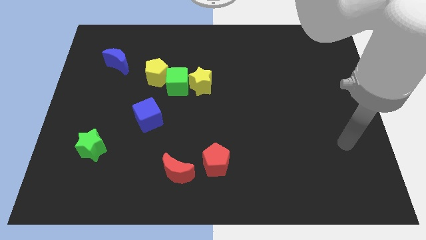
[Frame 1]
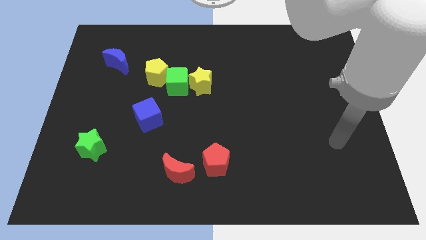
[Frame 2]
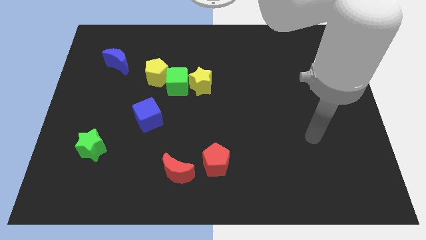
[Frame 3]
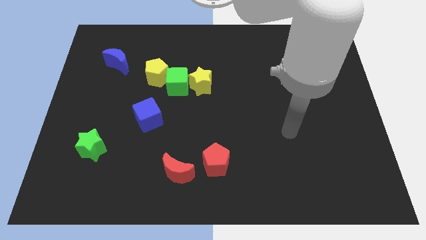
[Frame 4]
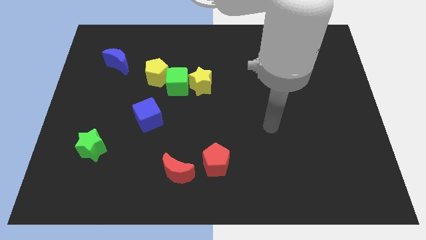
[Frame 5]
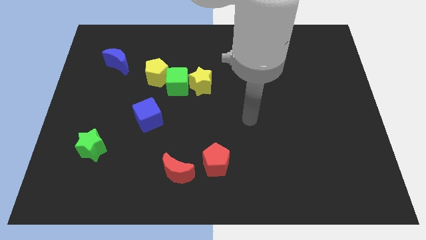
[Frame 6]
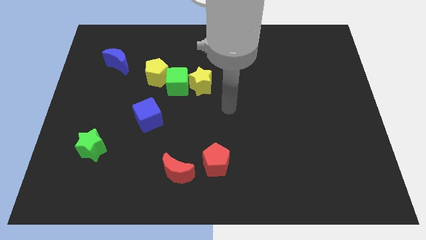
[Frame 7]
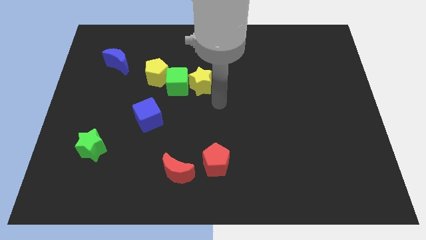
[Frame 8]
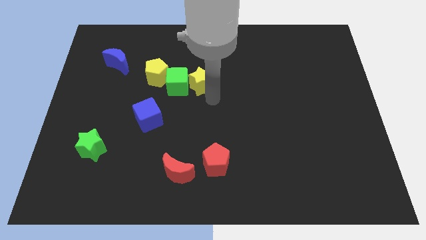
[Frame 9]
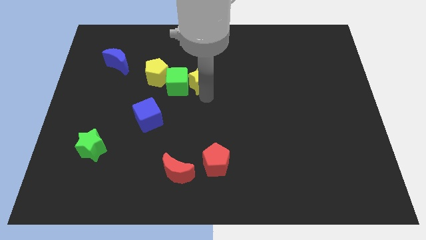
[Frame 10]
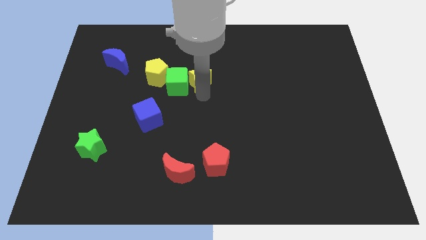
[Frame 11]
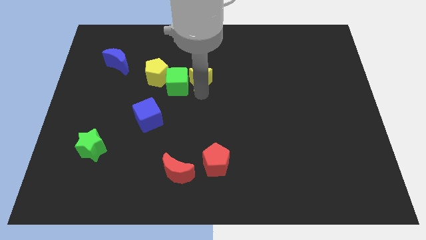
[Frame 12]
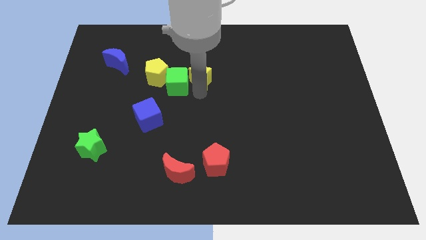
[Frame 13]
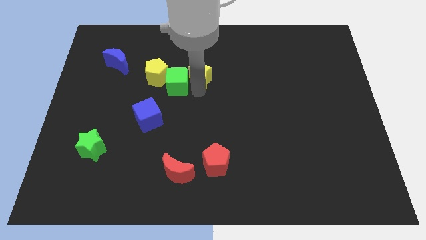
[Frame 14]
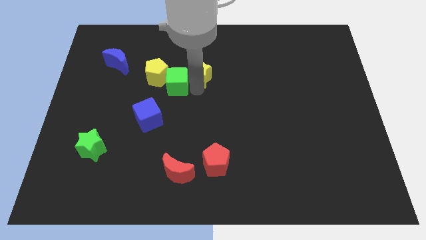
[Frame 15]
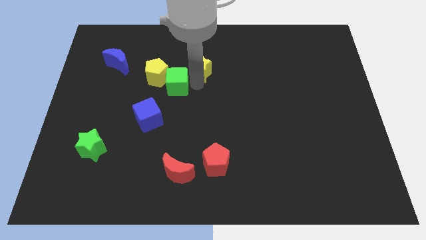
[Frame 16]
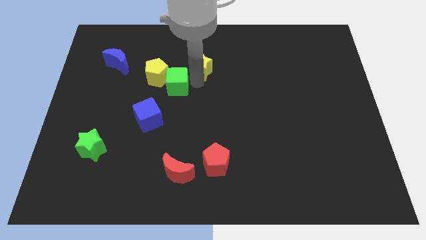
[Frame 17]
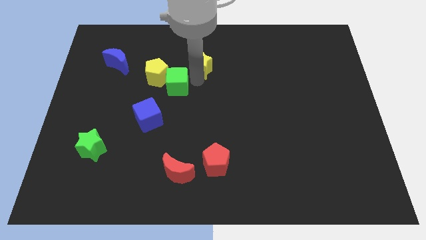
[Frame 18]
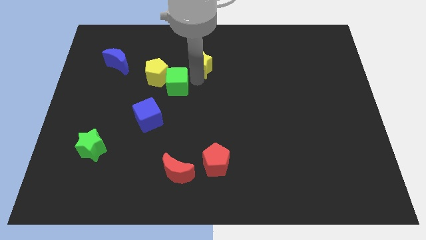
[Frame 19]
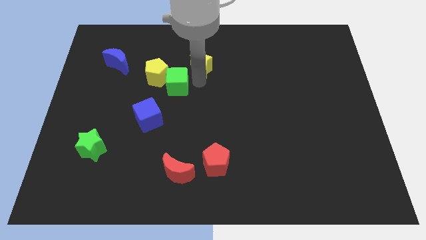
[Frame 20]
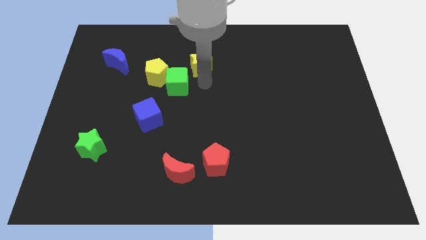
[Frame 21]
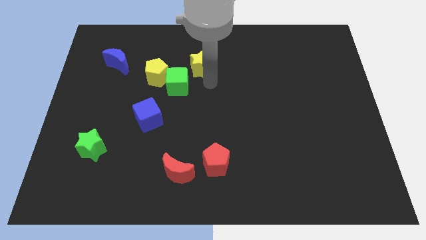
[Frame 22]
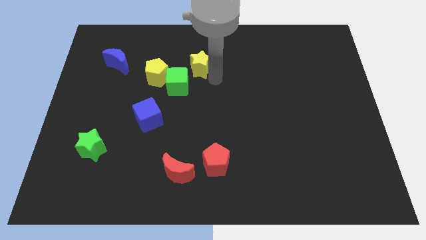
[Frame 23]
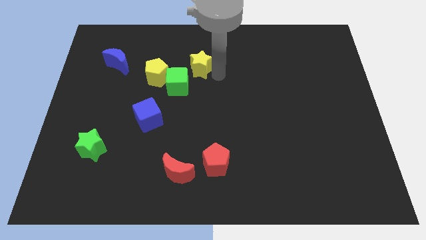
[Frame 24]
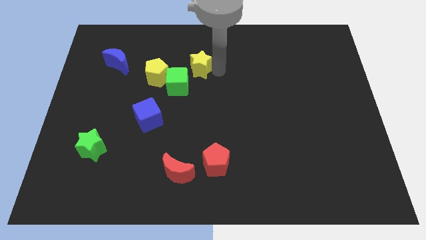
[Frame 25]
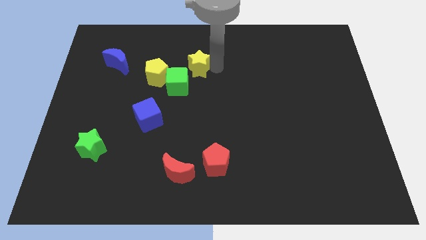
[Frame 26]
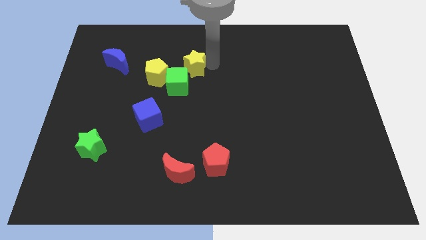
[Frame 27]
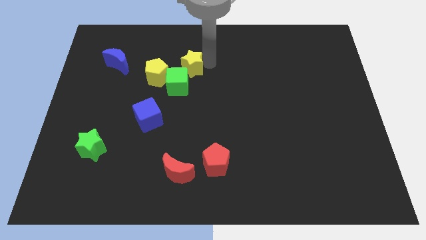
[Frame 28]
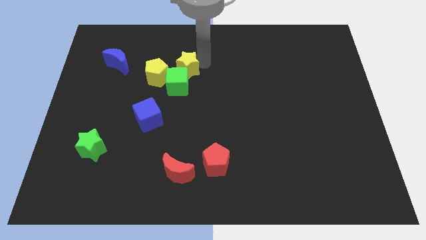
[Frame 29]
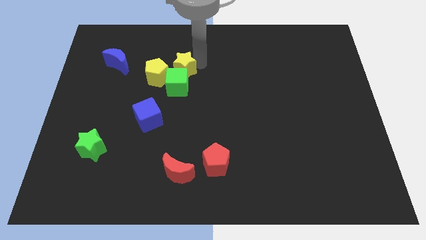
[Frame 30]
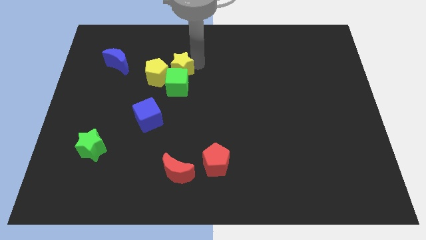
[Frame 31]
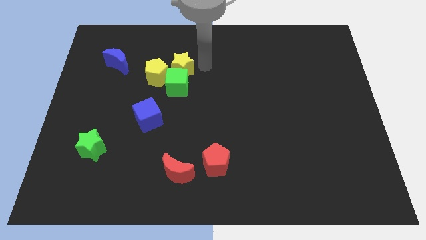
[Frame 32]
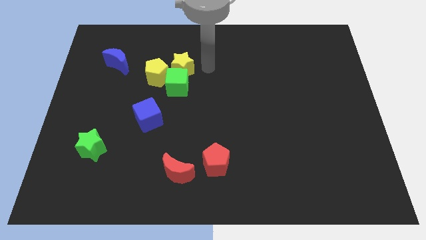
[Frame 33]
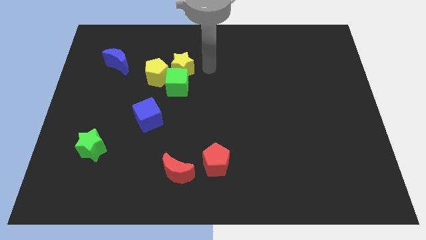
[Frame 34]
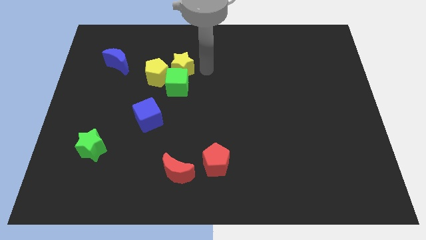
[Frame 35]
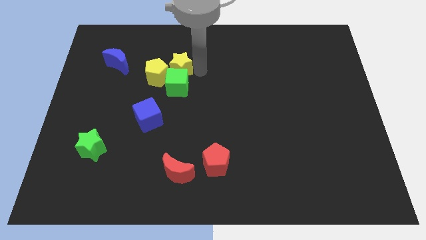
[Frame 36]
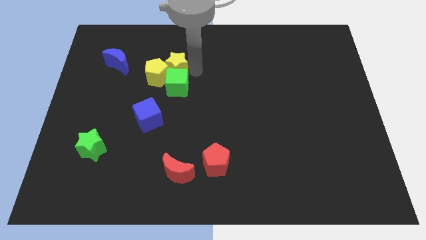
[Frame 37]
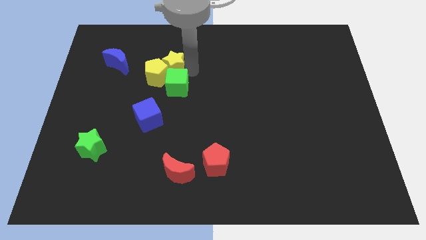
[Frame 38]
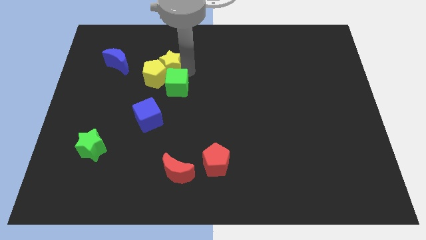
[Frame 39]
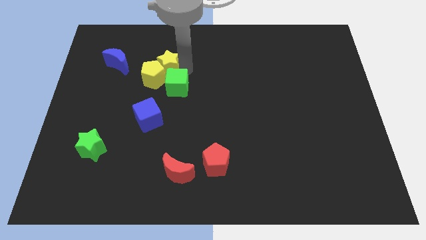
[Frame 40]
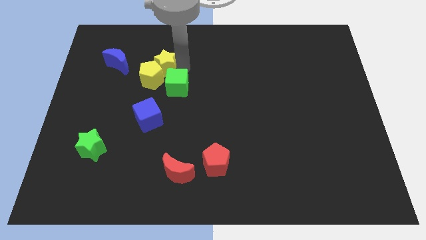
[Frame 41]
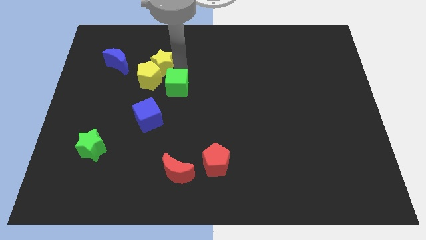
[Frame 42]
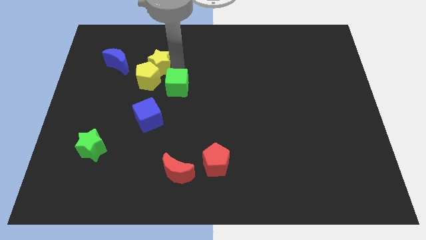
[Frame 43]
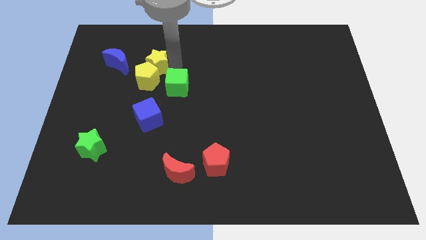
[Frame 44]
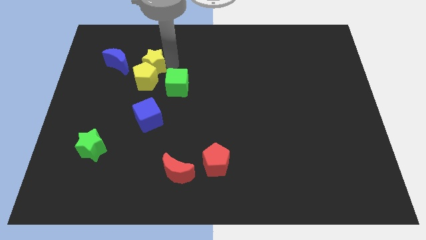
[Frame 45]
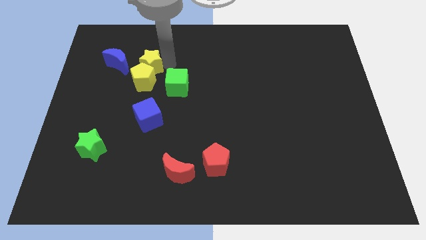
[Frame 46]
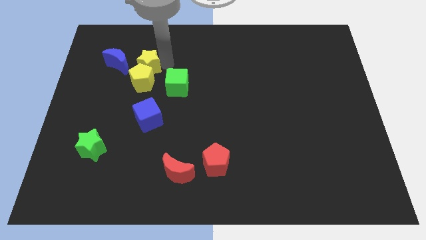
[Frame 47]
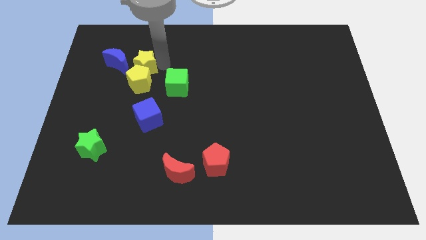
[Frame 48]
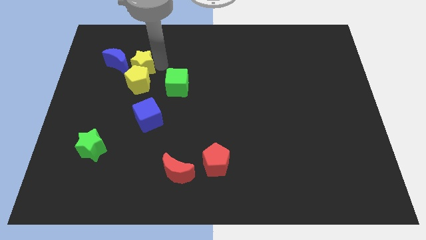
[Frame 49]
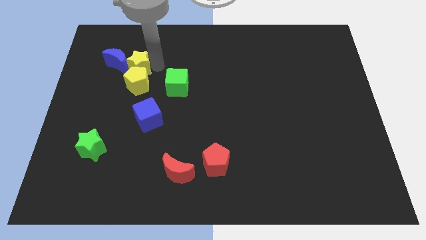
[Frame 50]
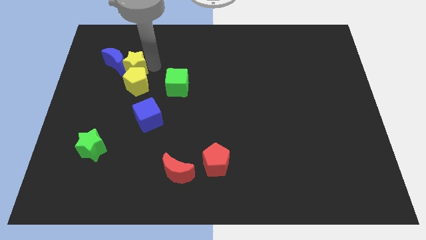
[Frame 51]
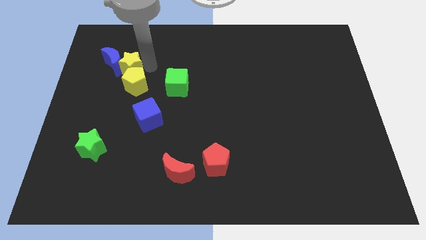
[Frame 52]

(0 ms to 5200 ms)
move the yellow star close to the blue moon

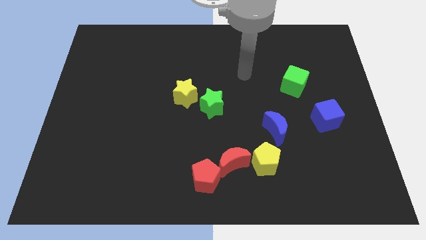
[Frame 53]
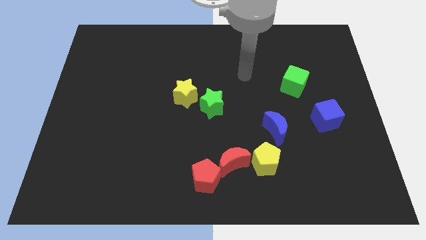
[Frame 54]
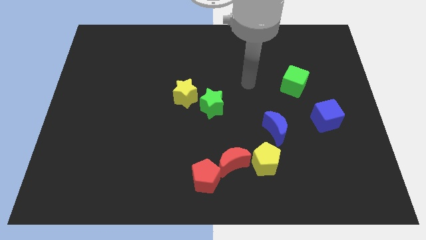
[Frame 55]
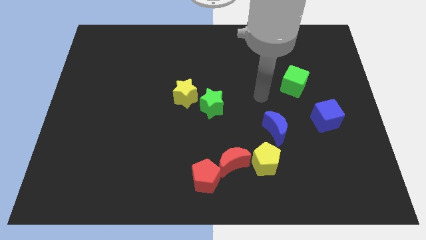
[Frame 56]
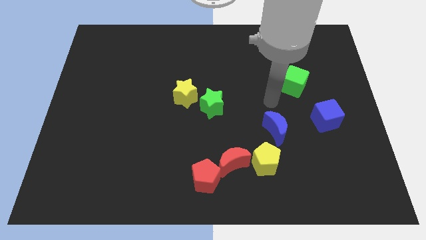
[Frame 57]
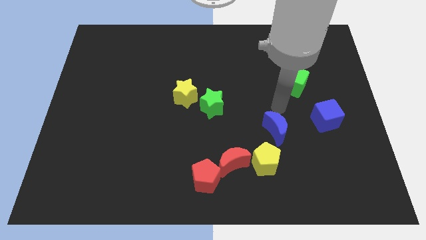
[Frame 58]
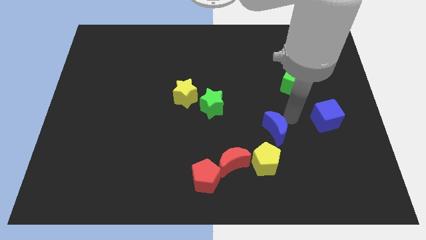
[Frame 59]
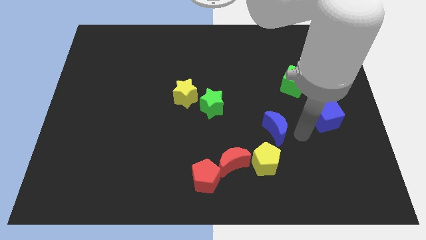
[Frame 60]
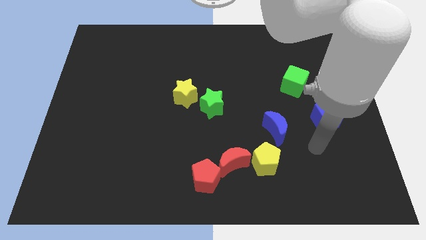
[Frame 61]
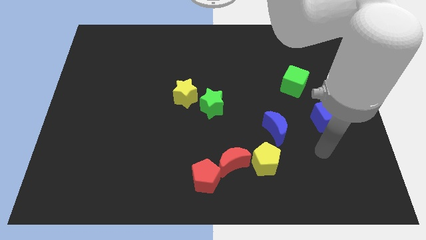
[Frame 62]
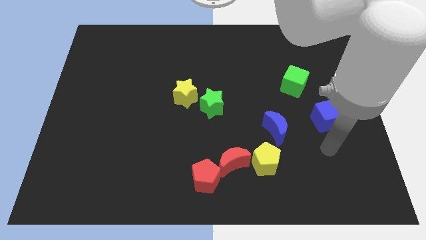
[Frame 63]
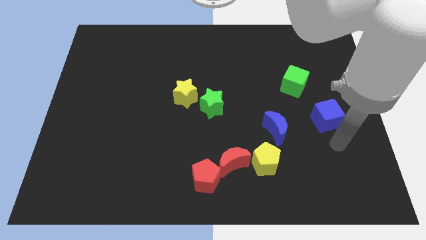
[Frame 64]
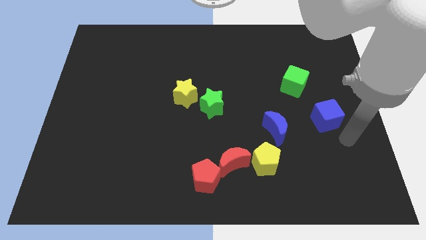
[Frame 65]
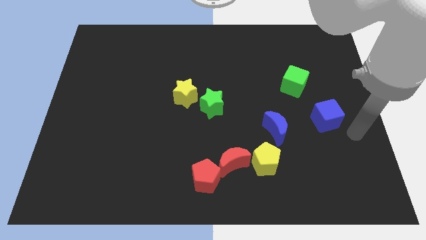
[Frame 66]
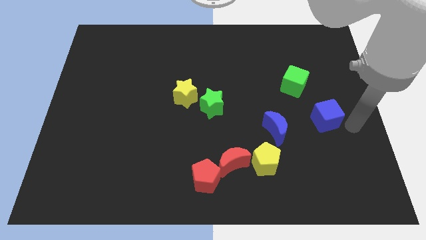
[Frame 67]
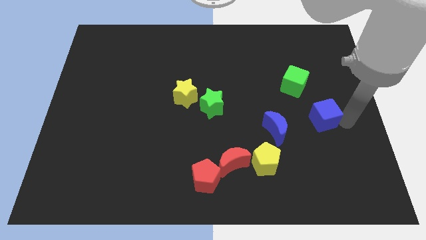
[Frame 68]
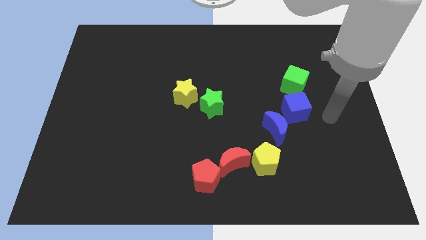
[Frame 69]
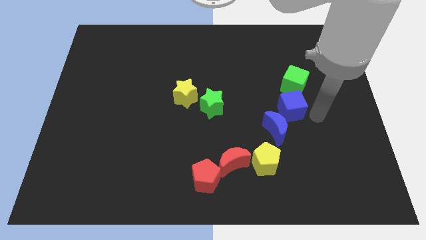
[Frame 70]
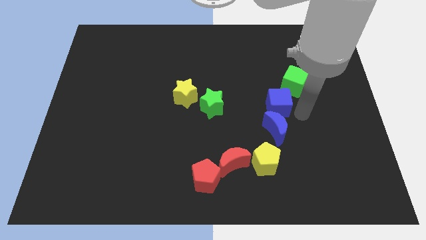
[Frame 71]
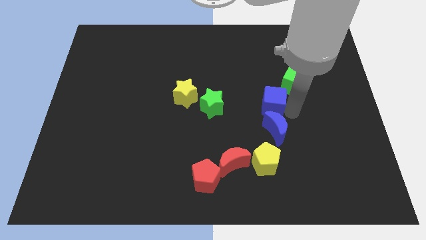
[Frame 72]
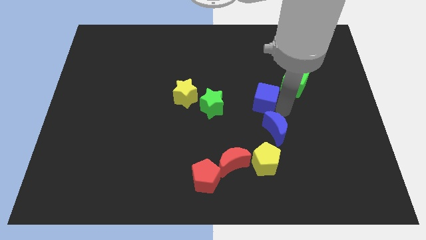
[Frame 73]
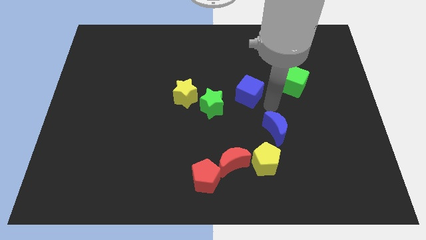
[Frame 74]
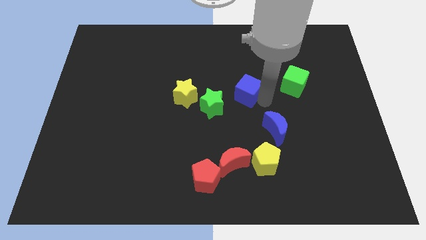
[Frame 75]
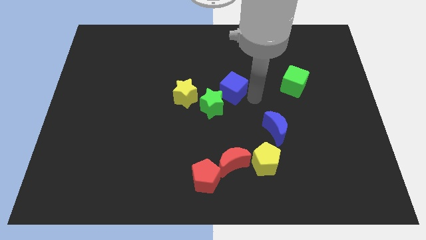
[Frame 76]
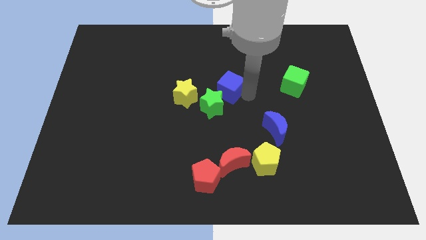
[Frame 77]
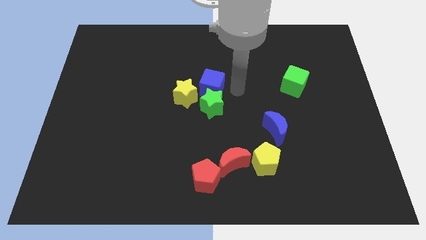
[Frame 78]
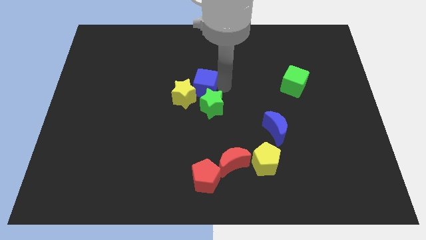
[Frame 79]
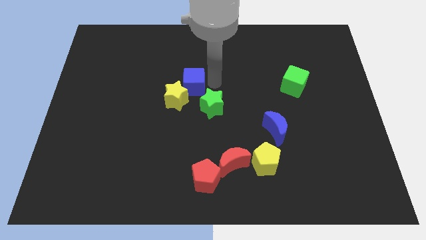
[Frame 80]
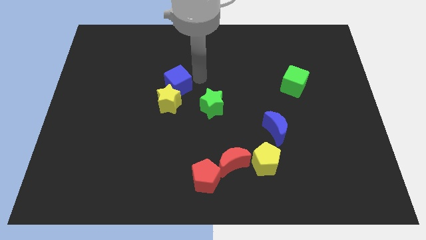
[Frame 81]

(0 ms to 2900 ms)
push the blue cube next to the yellow star

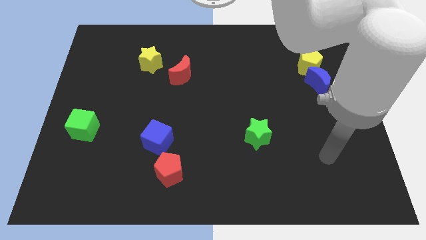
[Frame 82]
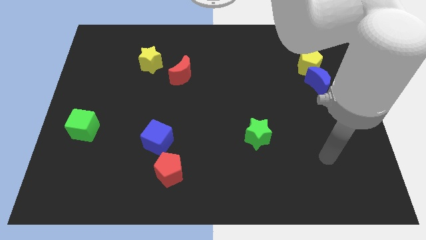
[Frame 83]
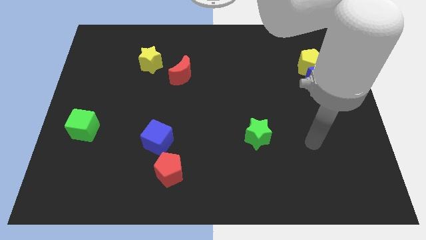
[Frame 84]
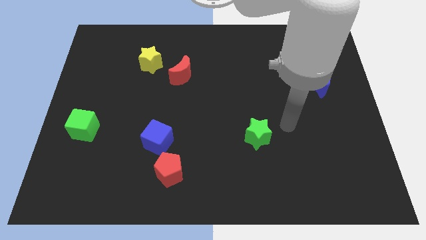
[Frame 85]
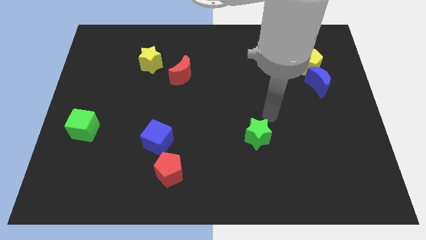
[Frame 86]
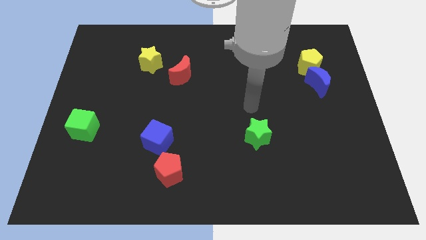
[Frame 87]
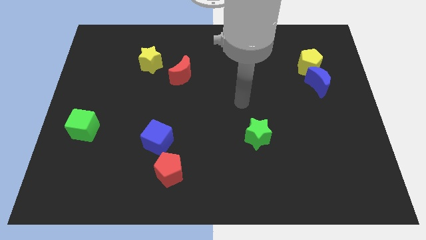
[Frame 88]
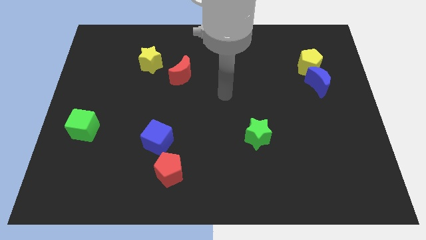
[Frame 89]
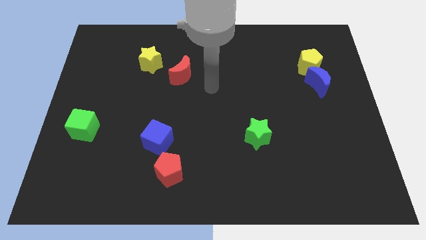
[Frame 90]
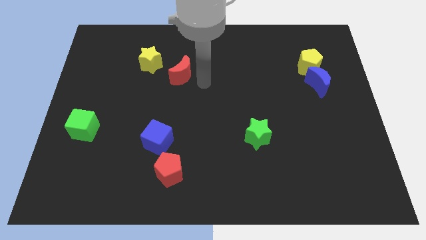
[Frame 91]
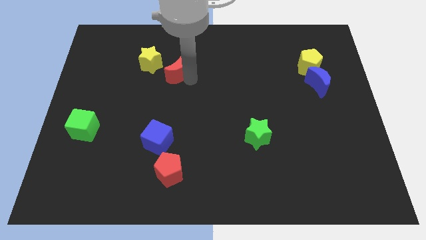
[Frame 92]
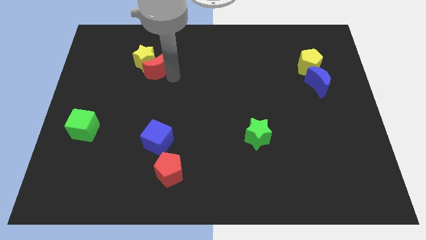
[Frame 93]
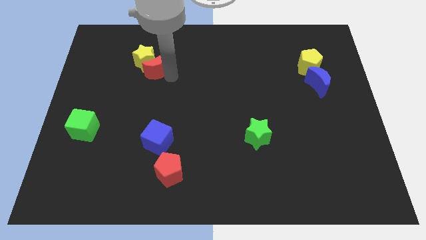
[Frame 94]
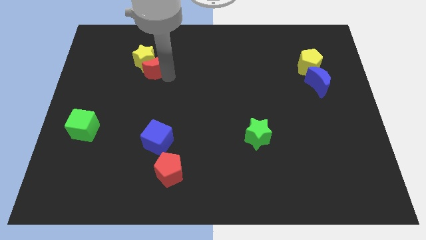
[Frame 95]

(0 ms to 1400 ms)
move the red moon towards the yellow star
